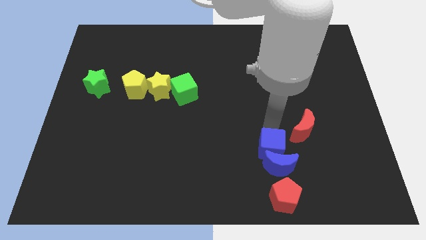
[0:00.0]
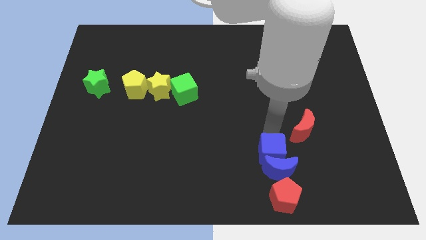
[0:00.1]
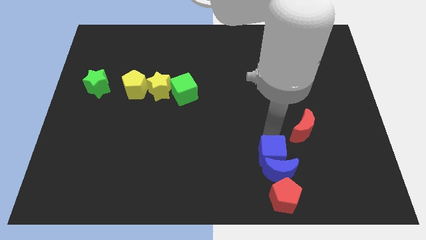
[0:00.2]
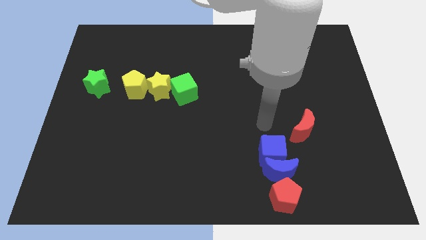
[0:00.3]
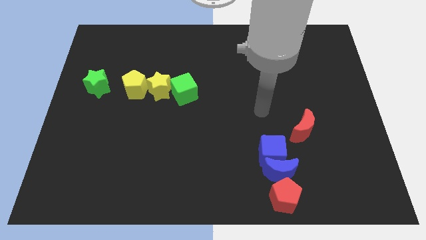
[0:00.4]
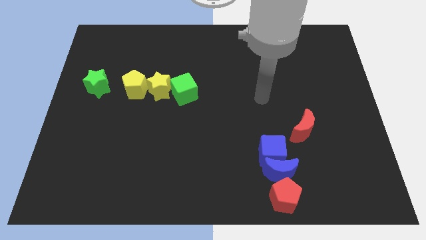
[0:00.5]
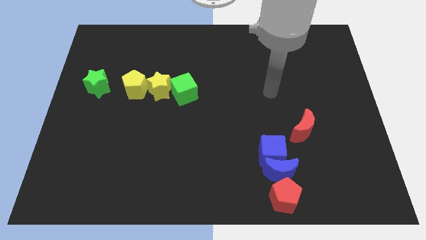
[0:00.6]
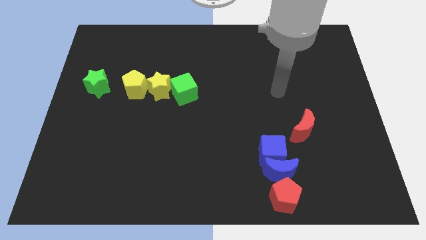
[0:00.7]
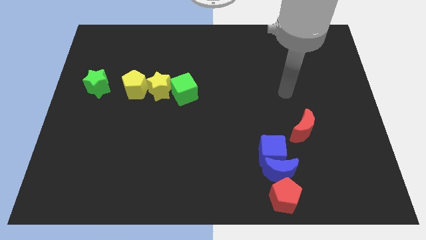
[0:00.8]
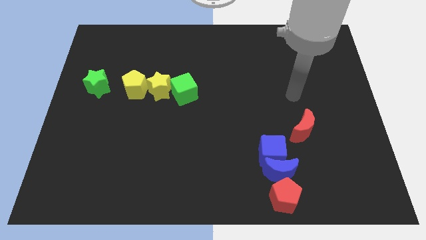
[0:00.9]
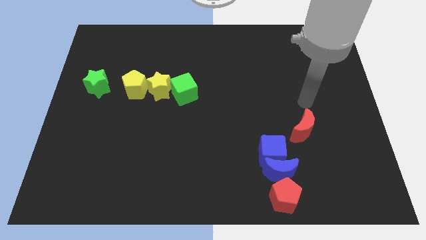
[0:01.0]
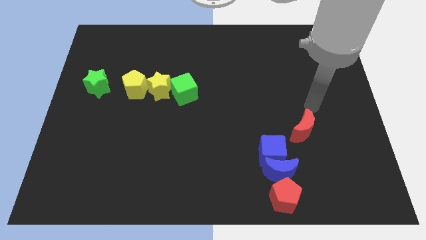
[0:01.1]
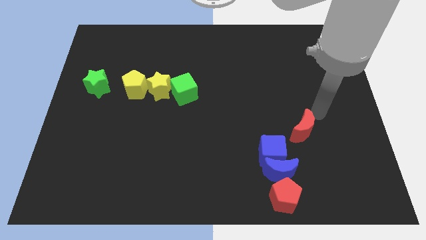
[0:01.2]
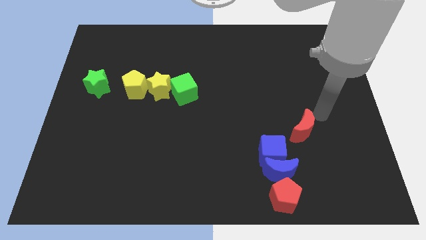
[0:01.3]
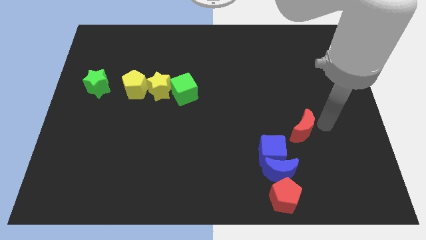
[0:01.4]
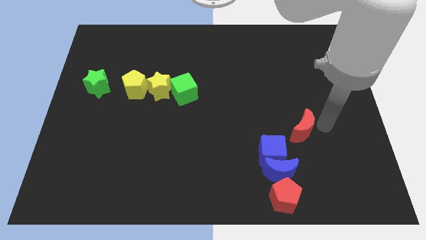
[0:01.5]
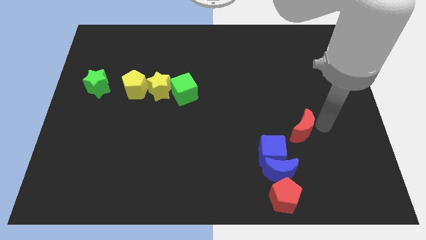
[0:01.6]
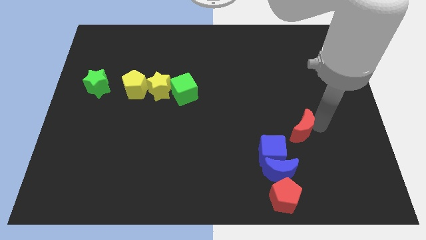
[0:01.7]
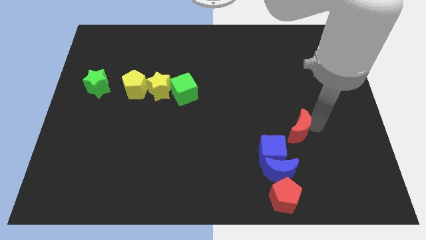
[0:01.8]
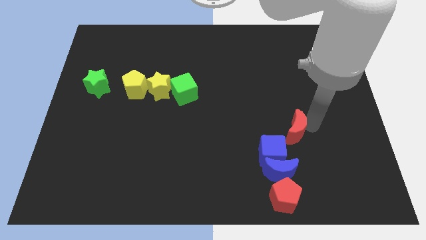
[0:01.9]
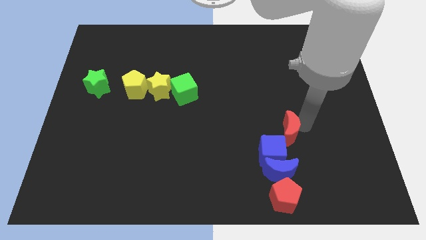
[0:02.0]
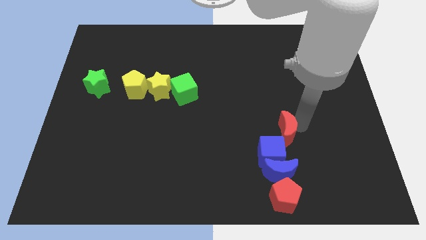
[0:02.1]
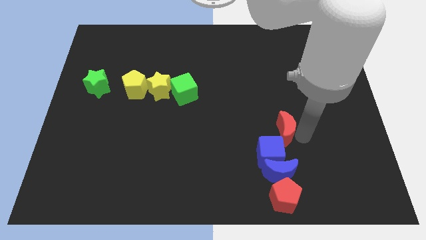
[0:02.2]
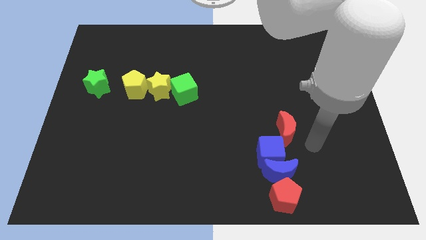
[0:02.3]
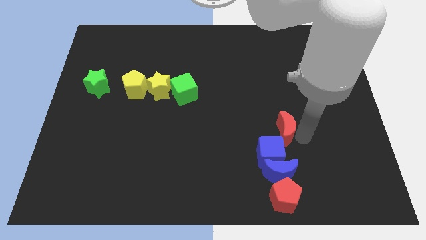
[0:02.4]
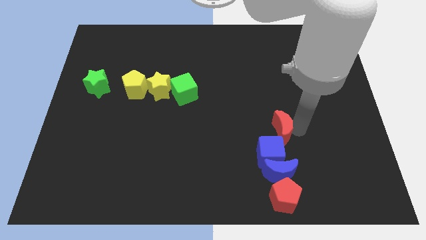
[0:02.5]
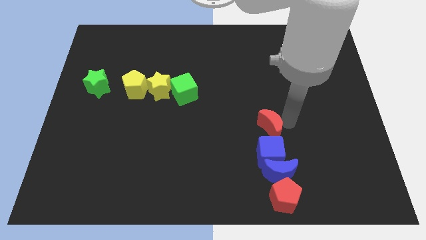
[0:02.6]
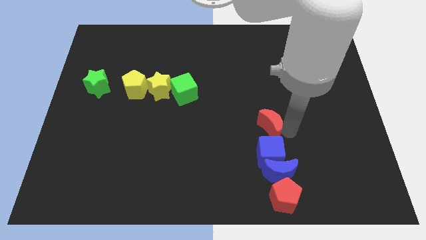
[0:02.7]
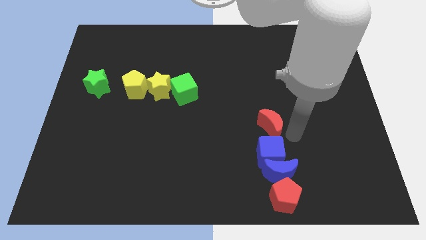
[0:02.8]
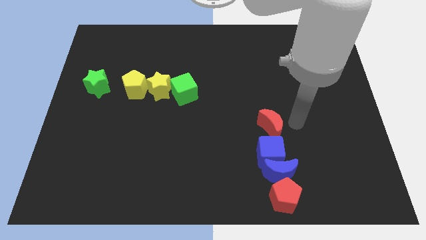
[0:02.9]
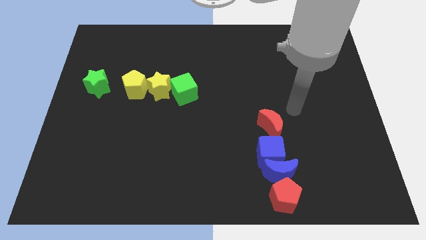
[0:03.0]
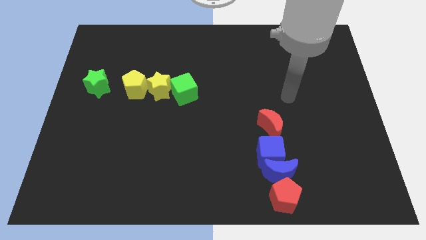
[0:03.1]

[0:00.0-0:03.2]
place red crescent above to the blue cube to form a vertical line

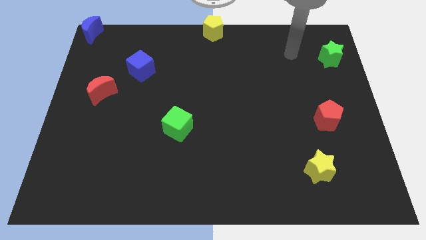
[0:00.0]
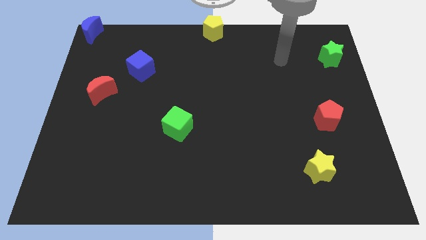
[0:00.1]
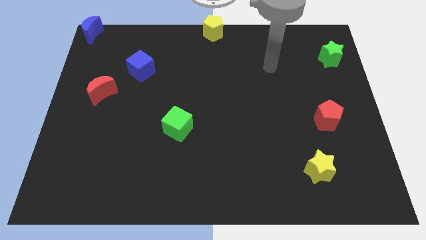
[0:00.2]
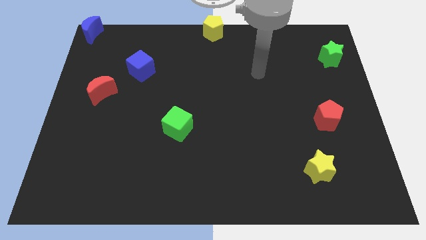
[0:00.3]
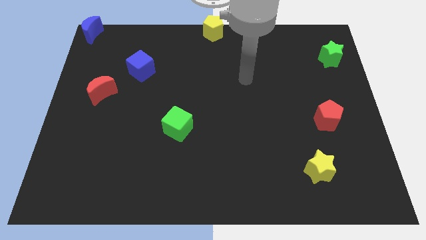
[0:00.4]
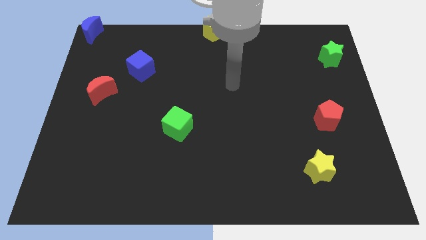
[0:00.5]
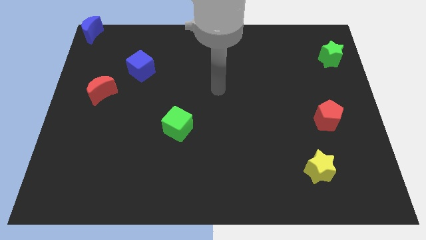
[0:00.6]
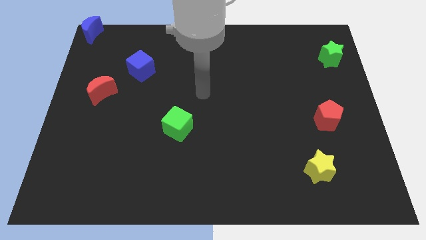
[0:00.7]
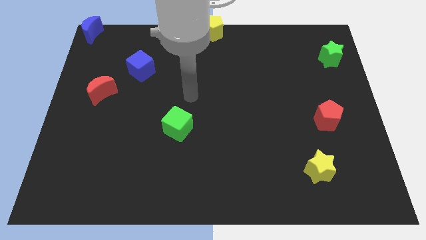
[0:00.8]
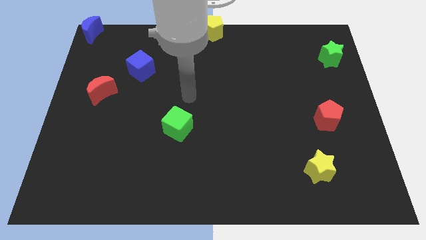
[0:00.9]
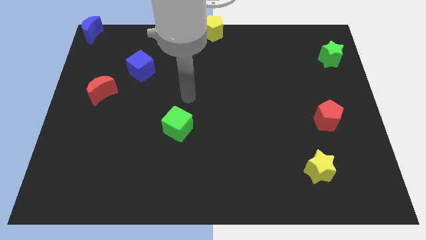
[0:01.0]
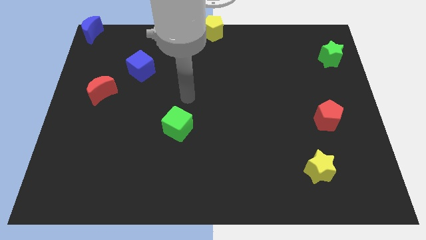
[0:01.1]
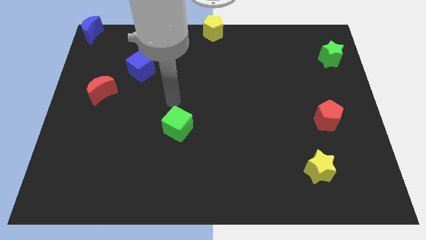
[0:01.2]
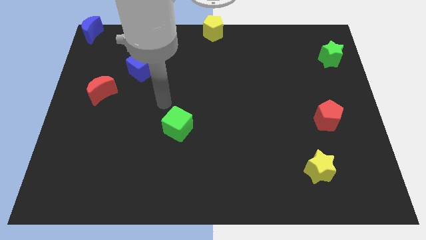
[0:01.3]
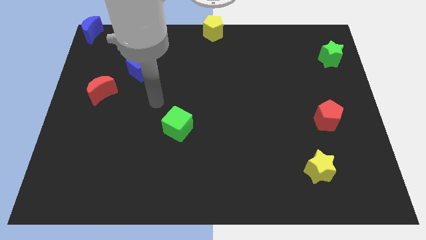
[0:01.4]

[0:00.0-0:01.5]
move your arm close to the left side of the green cube

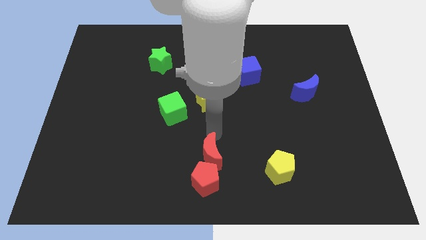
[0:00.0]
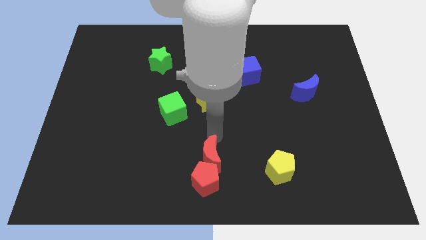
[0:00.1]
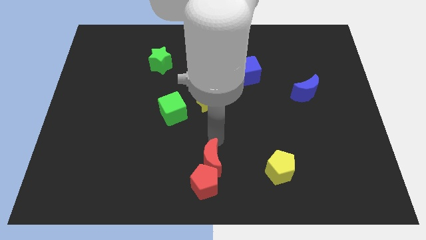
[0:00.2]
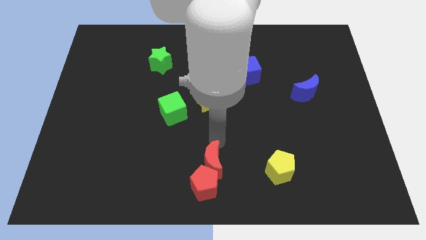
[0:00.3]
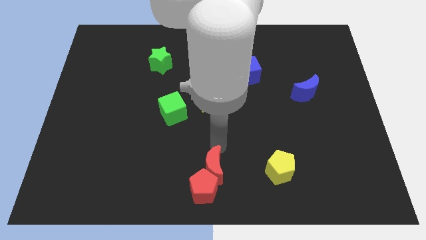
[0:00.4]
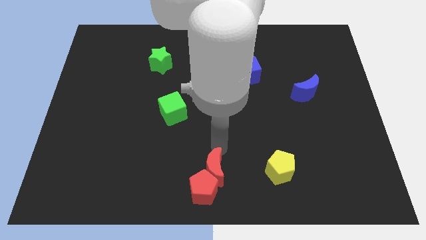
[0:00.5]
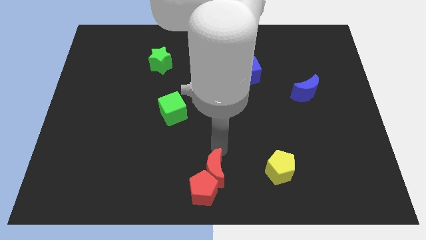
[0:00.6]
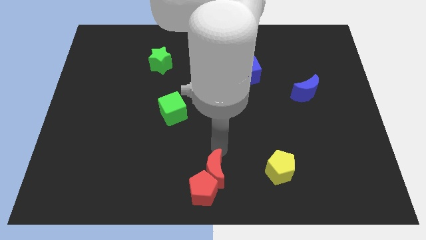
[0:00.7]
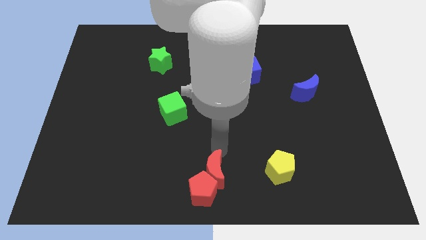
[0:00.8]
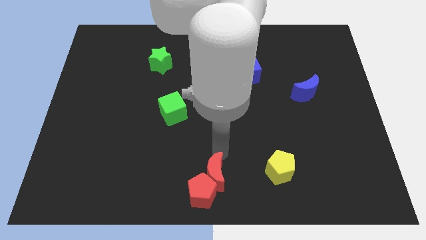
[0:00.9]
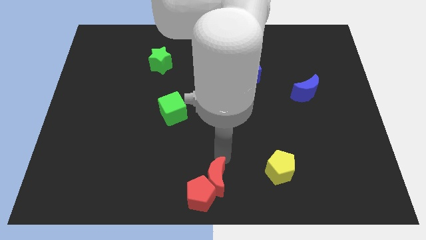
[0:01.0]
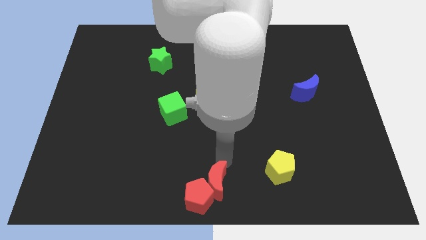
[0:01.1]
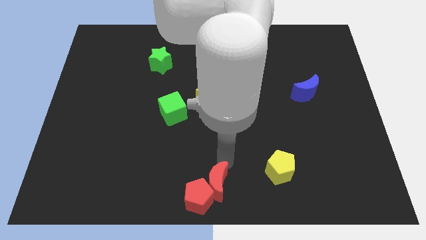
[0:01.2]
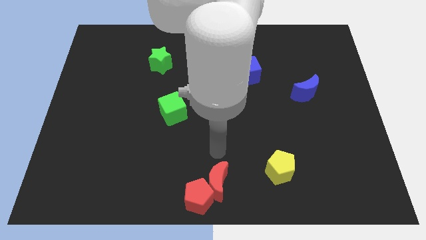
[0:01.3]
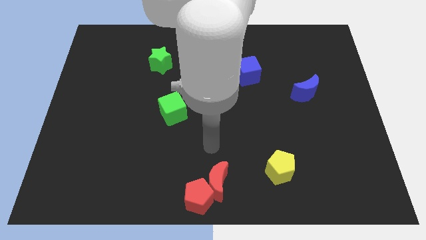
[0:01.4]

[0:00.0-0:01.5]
move red blocks to the bottom center of the board

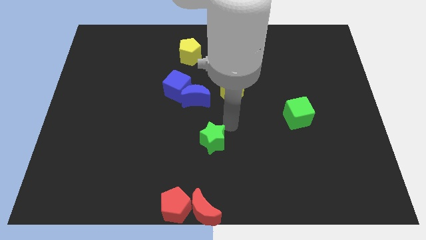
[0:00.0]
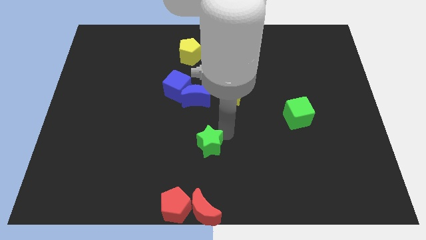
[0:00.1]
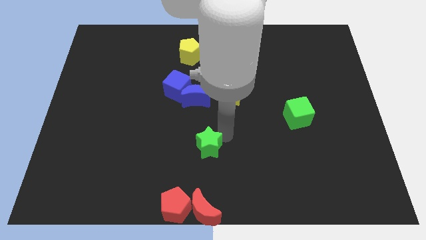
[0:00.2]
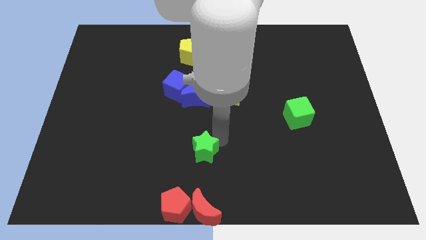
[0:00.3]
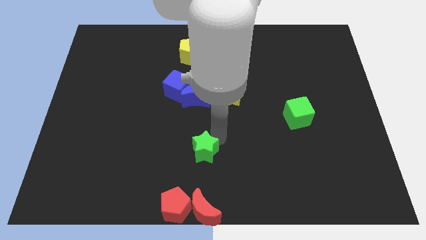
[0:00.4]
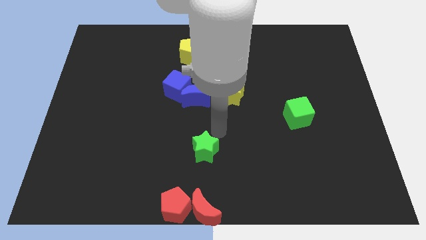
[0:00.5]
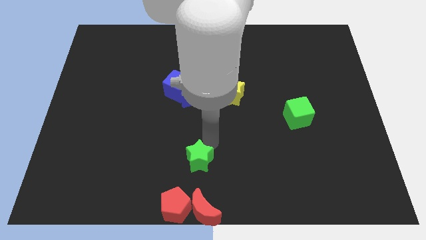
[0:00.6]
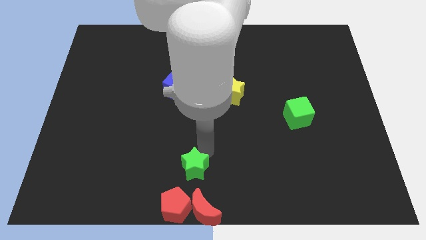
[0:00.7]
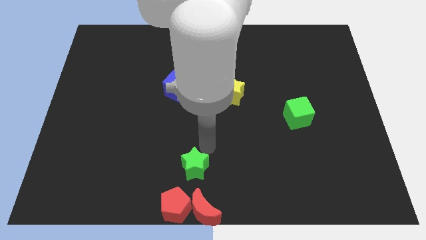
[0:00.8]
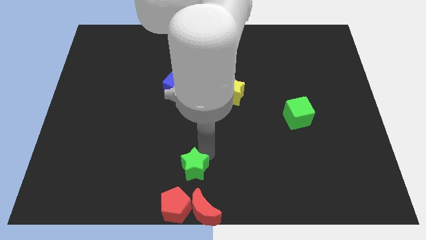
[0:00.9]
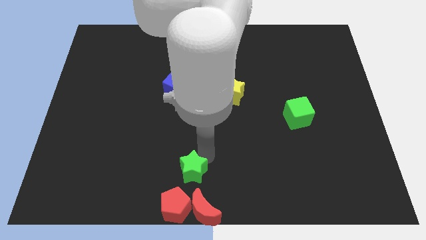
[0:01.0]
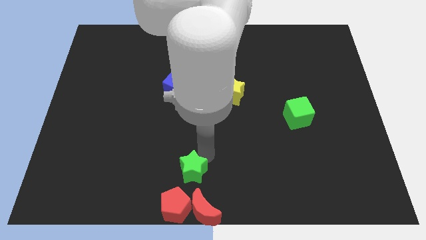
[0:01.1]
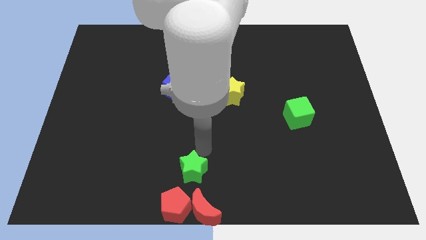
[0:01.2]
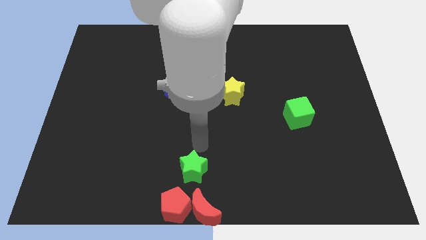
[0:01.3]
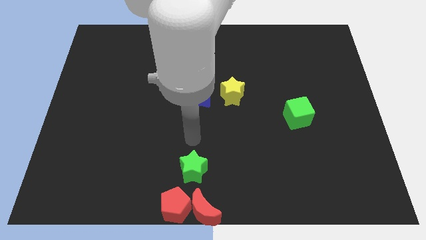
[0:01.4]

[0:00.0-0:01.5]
push the green star at the center top of the red pentagon and red crescent

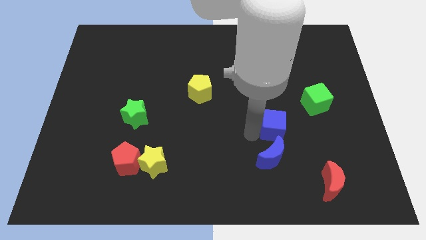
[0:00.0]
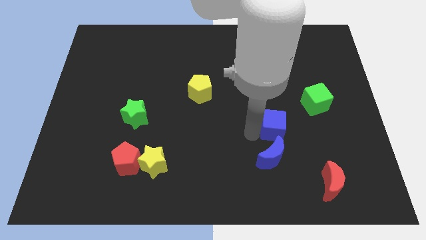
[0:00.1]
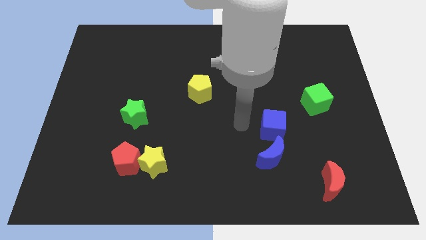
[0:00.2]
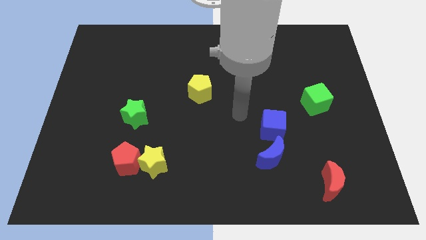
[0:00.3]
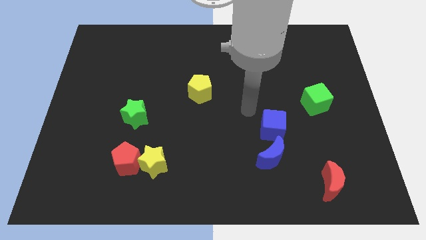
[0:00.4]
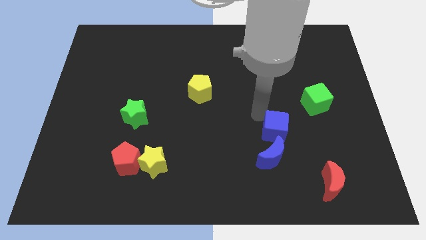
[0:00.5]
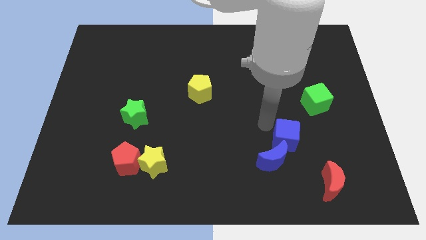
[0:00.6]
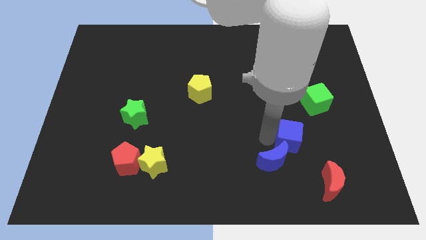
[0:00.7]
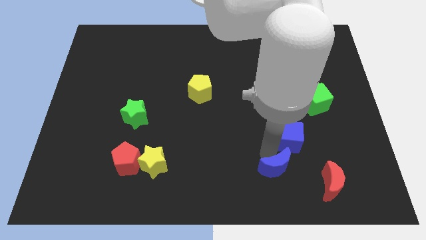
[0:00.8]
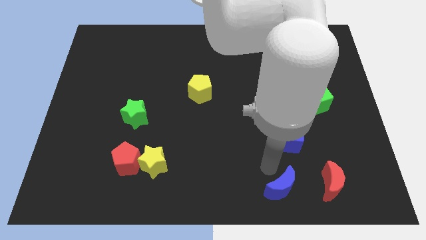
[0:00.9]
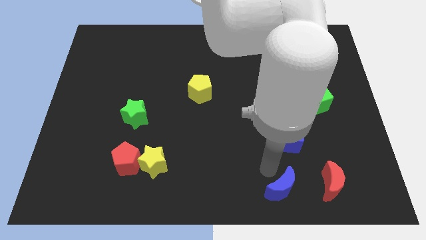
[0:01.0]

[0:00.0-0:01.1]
separate the blue moon and the blue cube

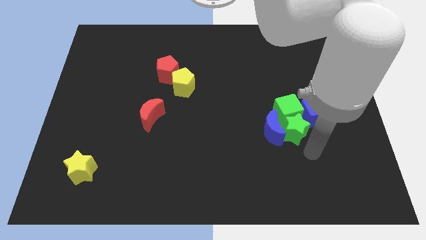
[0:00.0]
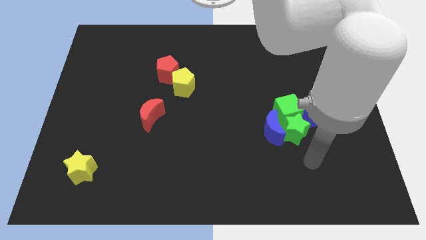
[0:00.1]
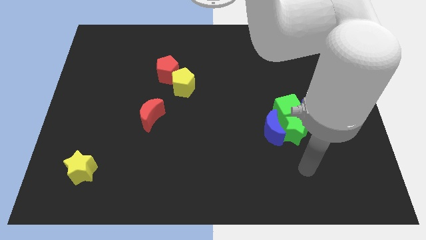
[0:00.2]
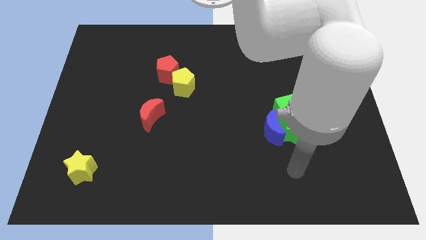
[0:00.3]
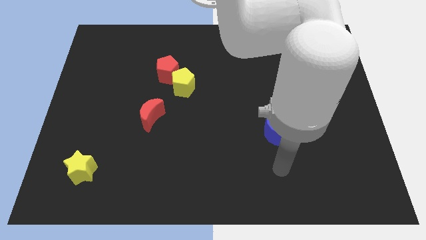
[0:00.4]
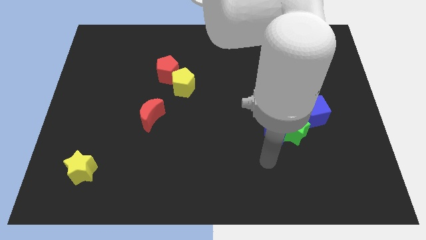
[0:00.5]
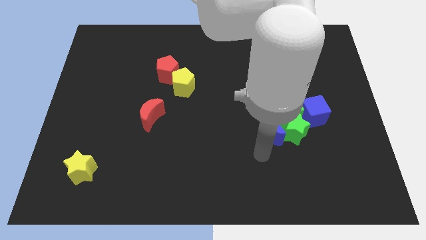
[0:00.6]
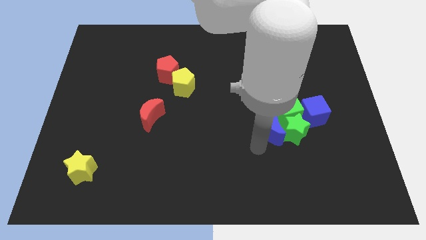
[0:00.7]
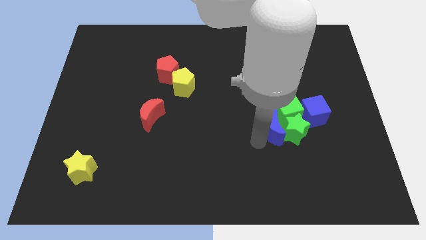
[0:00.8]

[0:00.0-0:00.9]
point your arm to the left side of blue moon
